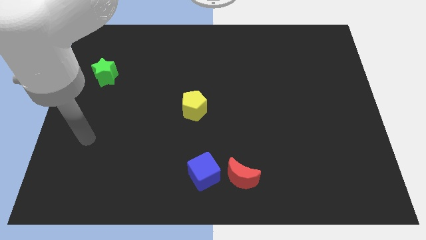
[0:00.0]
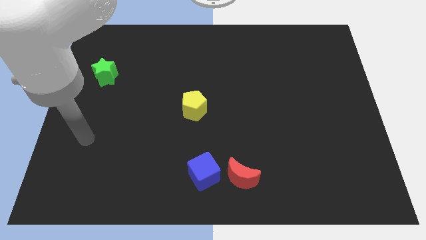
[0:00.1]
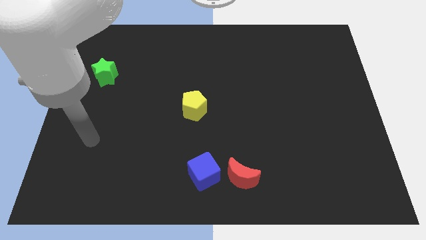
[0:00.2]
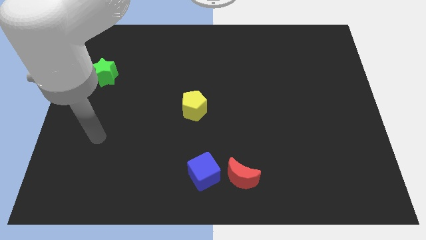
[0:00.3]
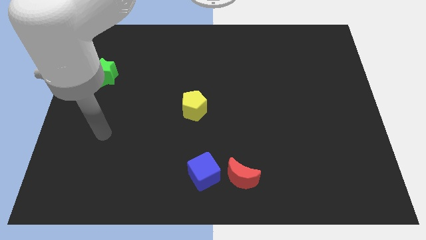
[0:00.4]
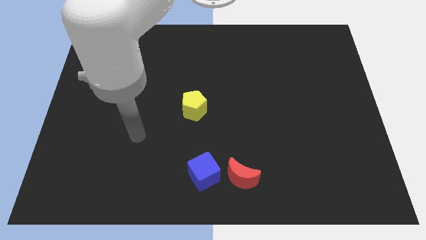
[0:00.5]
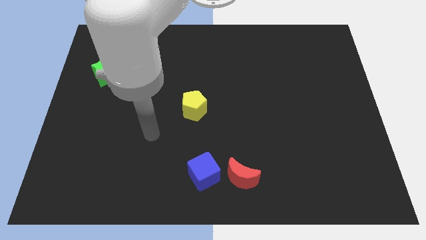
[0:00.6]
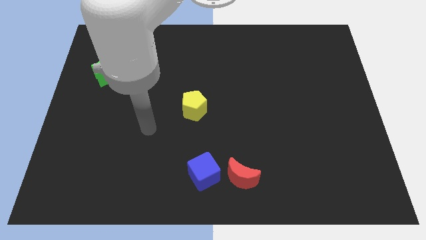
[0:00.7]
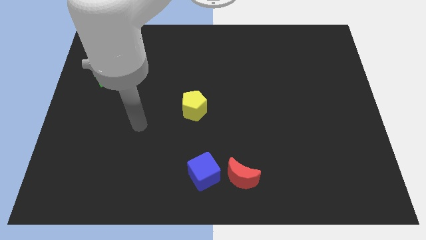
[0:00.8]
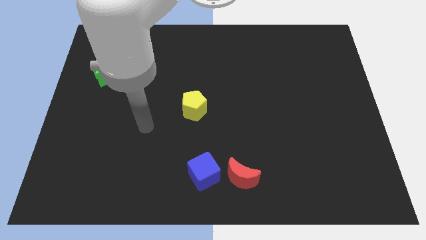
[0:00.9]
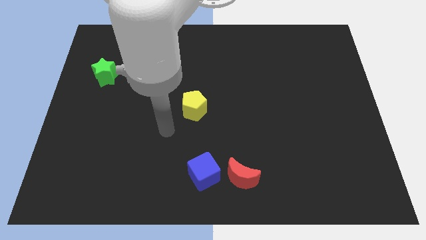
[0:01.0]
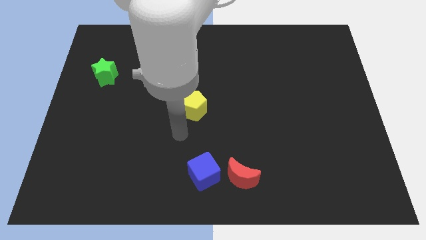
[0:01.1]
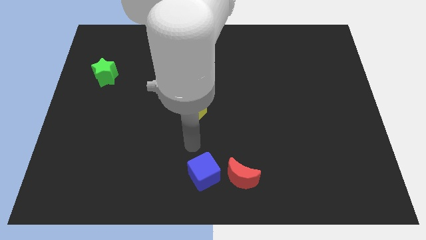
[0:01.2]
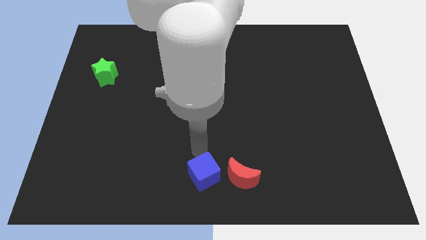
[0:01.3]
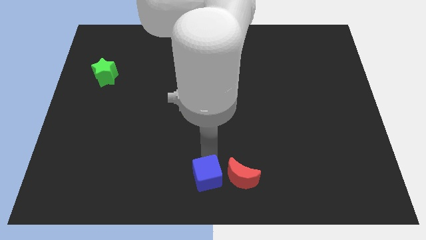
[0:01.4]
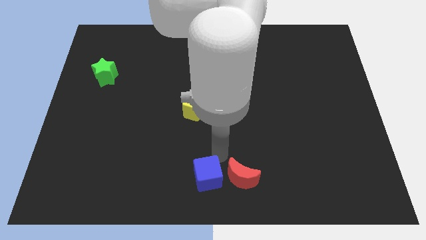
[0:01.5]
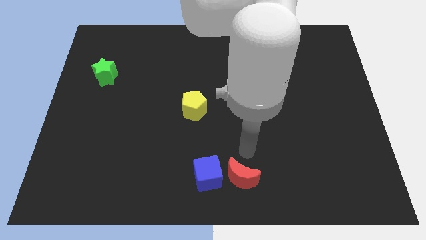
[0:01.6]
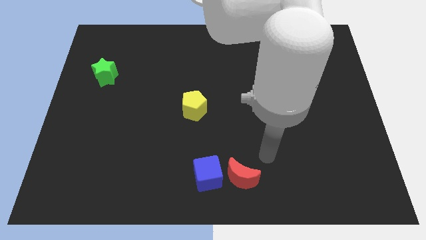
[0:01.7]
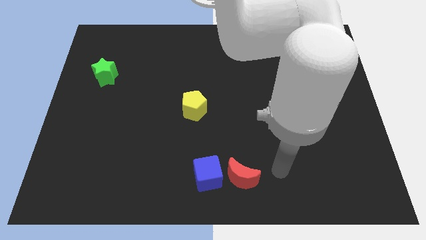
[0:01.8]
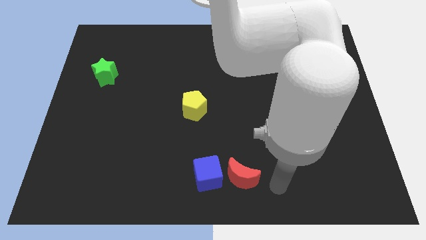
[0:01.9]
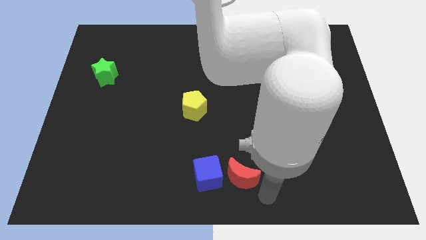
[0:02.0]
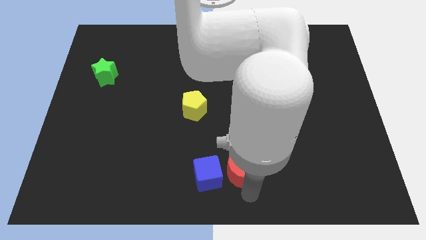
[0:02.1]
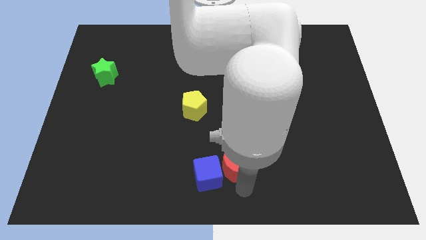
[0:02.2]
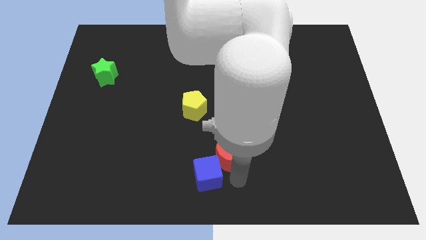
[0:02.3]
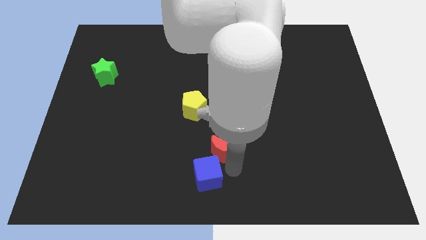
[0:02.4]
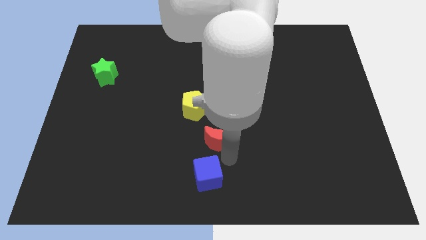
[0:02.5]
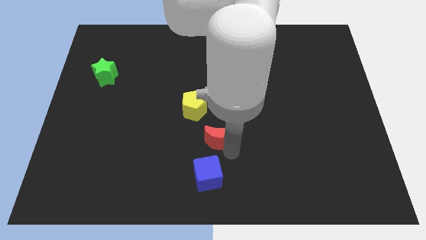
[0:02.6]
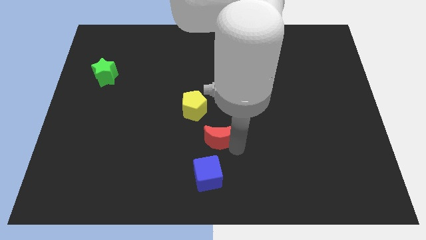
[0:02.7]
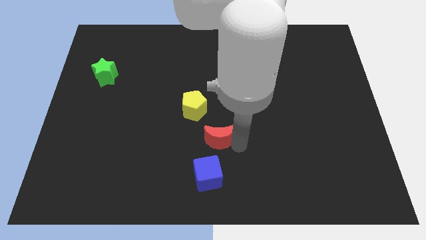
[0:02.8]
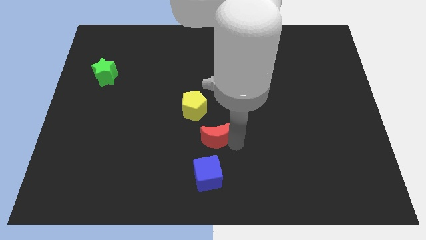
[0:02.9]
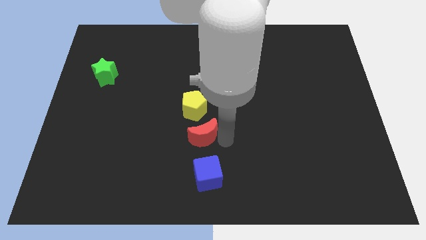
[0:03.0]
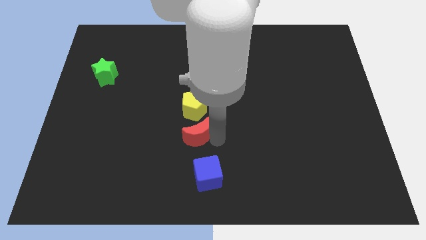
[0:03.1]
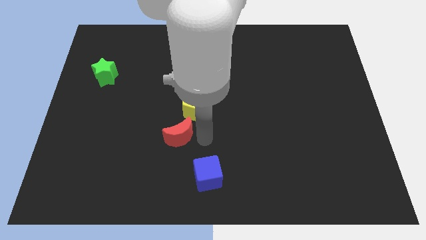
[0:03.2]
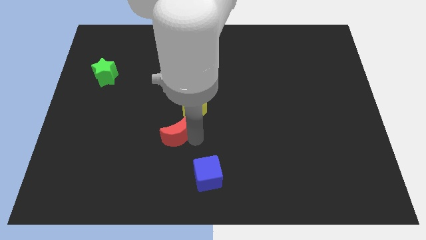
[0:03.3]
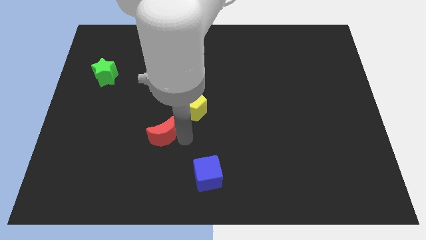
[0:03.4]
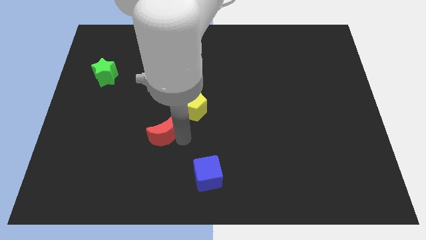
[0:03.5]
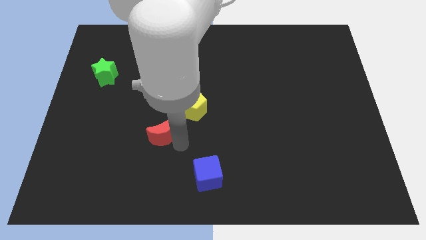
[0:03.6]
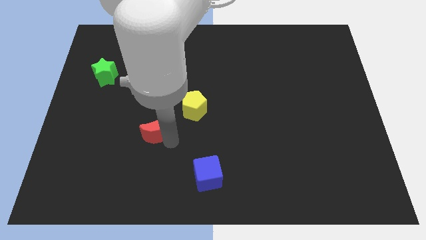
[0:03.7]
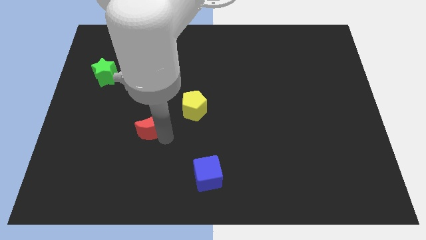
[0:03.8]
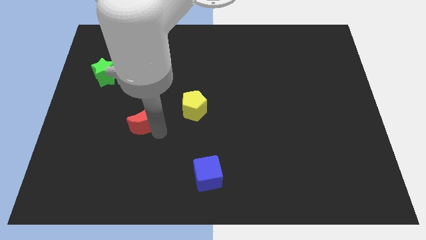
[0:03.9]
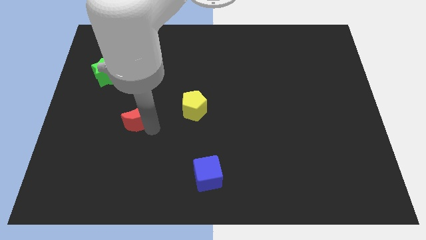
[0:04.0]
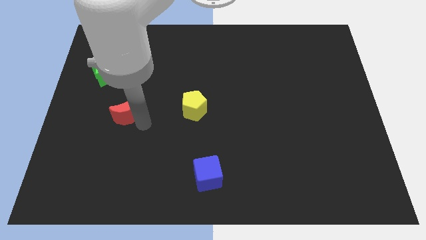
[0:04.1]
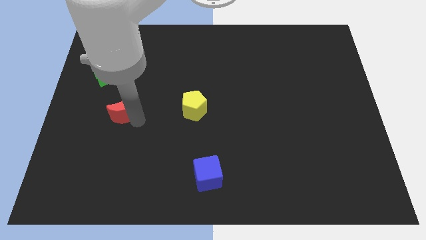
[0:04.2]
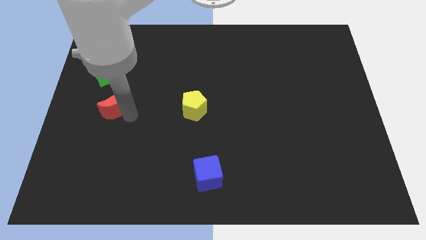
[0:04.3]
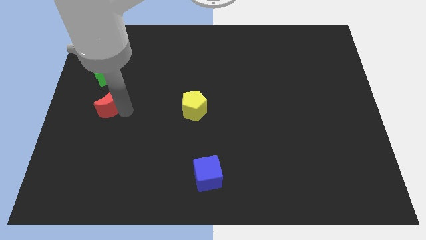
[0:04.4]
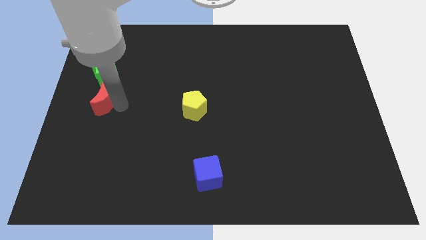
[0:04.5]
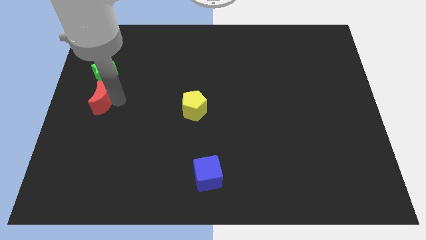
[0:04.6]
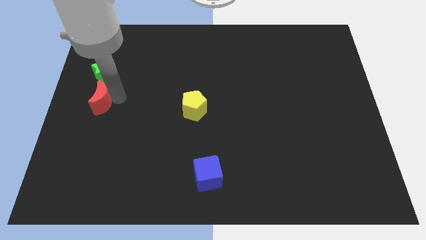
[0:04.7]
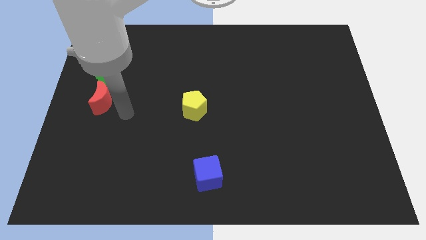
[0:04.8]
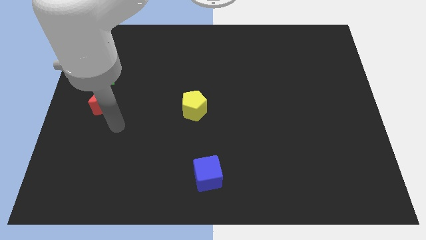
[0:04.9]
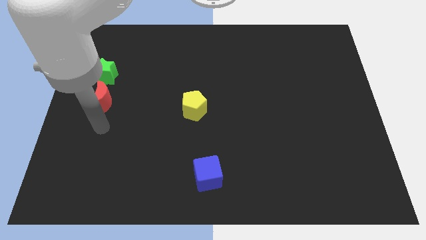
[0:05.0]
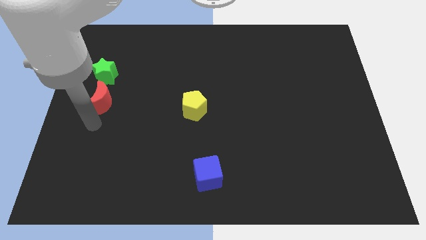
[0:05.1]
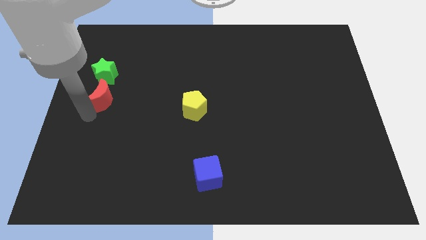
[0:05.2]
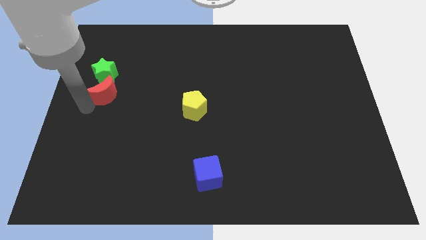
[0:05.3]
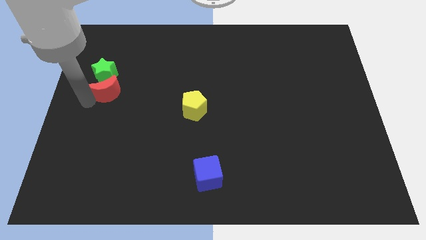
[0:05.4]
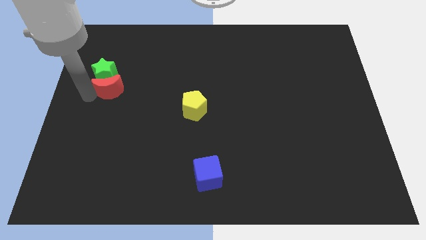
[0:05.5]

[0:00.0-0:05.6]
put the red block to the green star

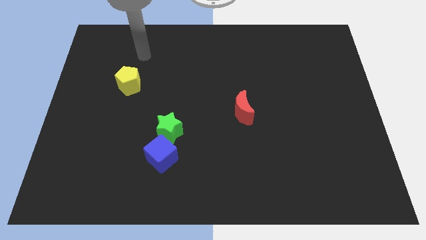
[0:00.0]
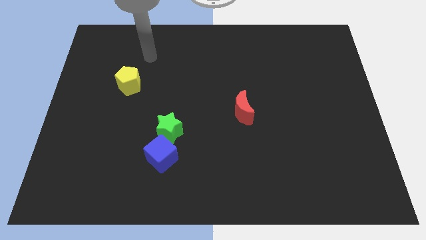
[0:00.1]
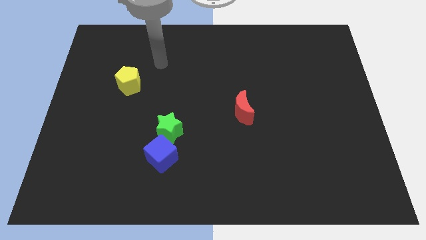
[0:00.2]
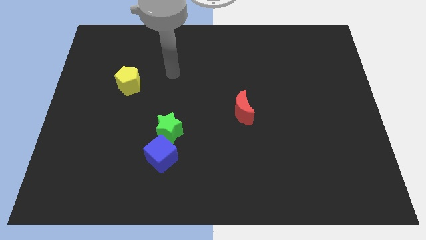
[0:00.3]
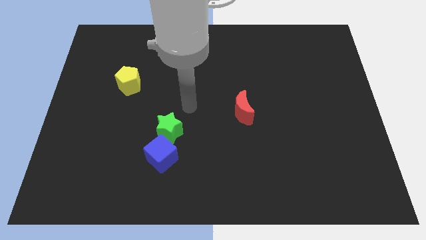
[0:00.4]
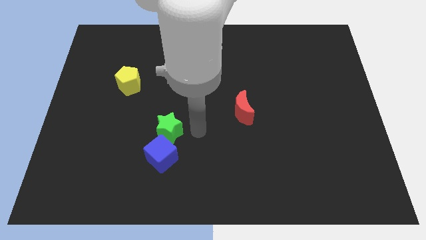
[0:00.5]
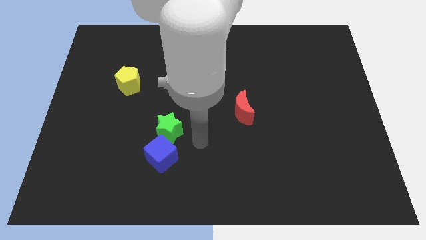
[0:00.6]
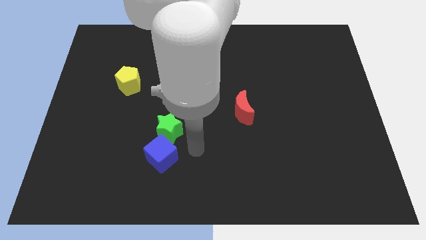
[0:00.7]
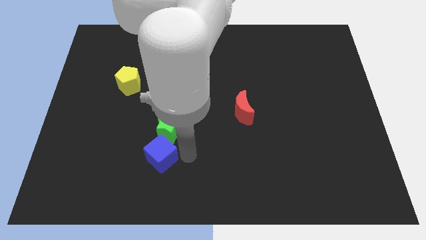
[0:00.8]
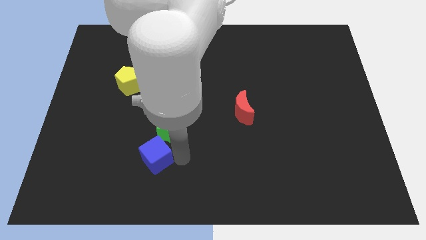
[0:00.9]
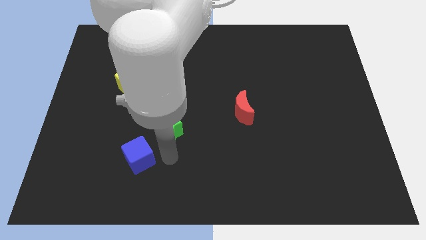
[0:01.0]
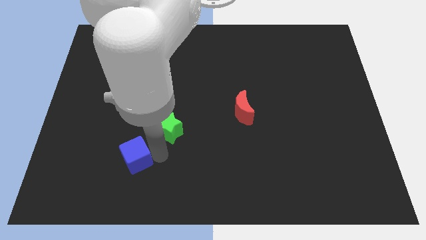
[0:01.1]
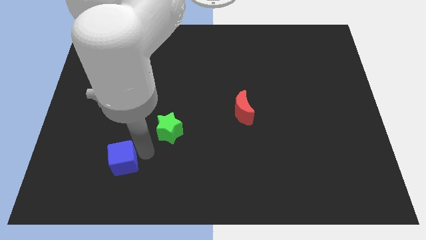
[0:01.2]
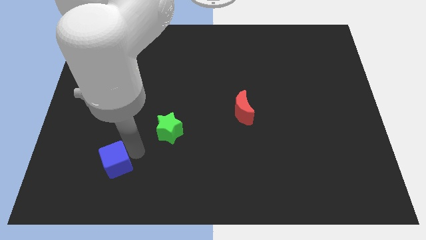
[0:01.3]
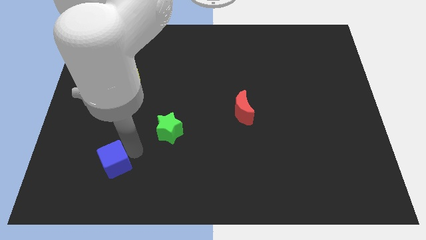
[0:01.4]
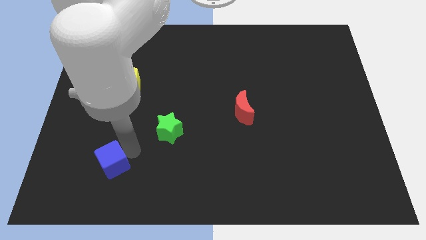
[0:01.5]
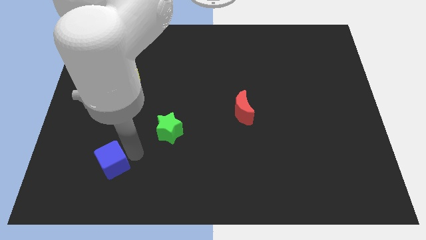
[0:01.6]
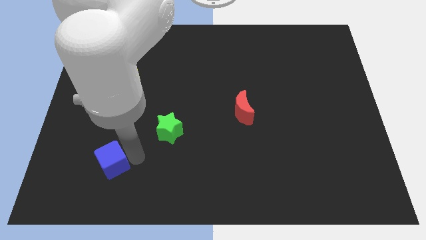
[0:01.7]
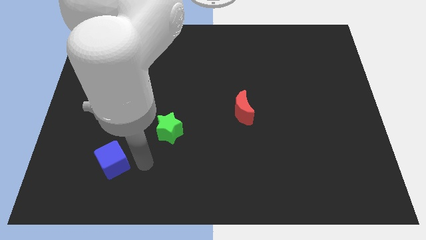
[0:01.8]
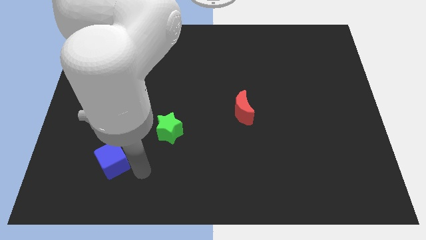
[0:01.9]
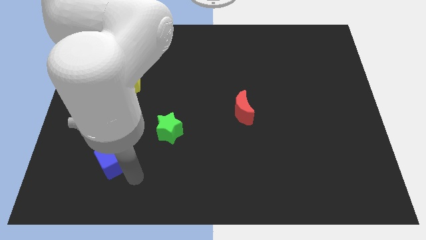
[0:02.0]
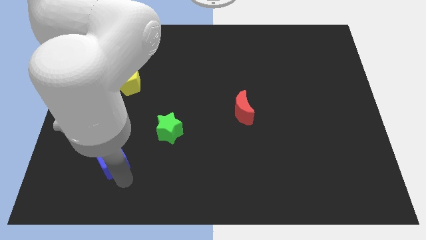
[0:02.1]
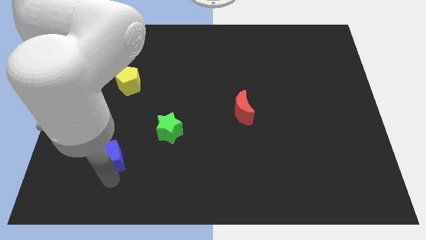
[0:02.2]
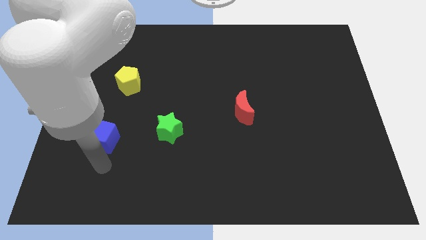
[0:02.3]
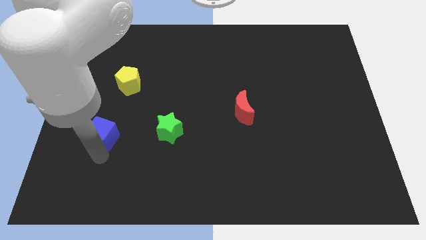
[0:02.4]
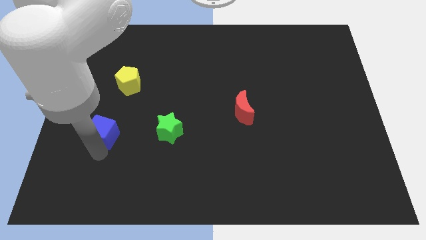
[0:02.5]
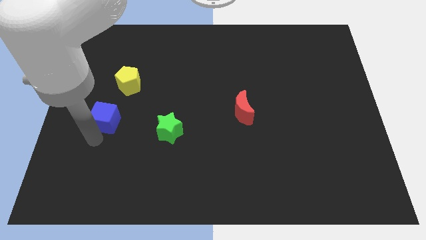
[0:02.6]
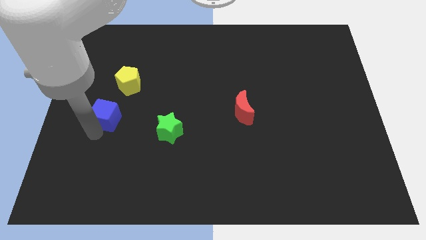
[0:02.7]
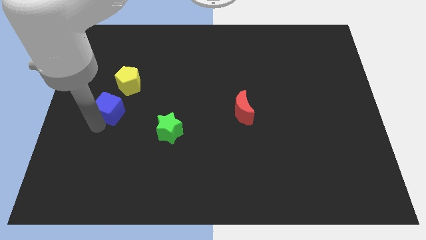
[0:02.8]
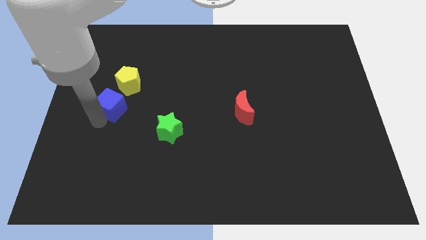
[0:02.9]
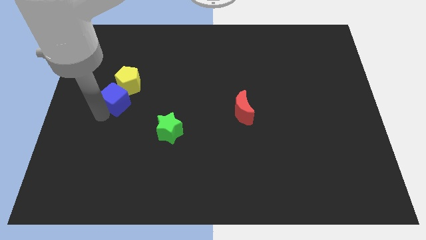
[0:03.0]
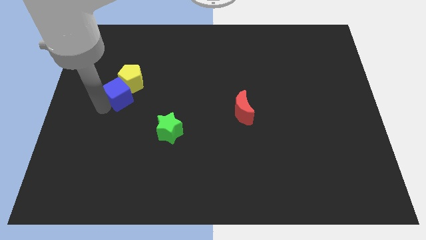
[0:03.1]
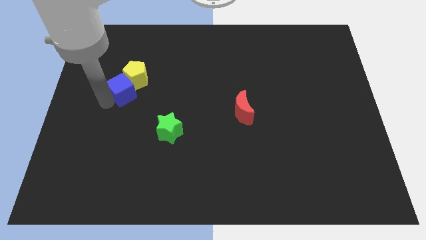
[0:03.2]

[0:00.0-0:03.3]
put the cube close to the pentagon
